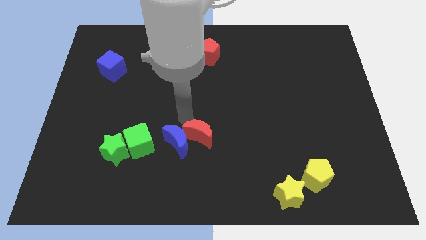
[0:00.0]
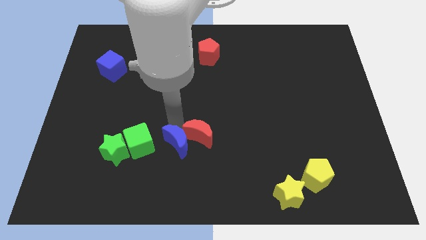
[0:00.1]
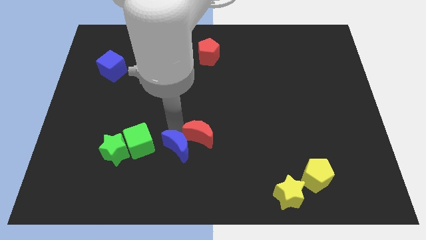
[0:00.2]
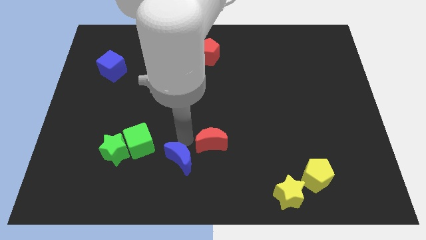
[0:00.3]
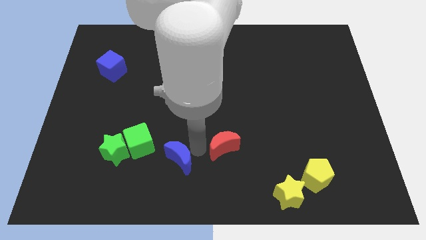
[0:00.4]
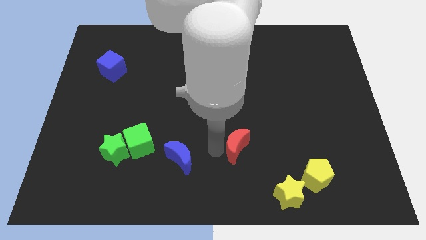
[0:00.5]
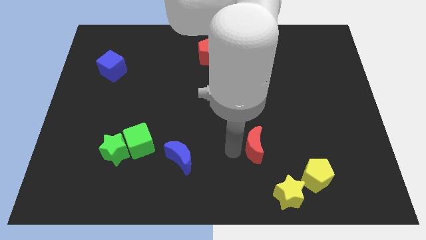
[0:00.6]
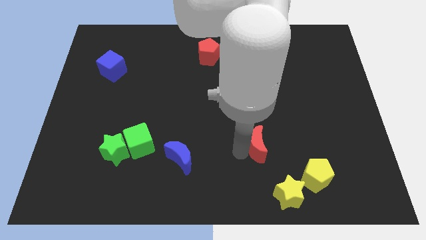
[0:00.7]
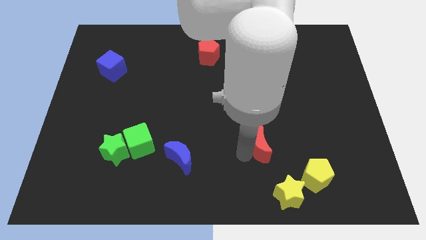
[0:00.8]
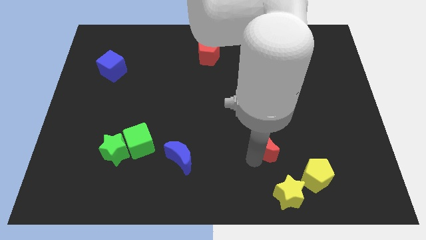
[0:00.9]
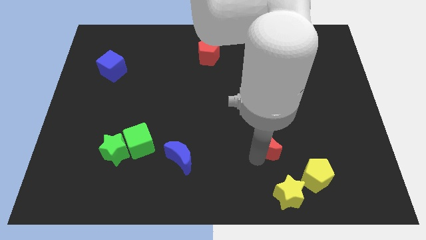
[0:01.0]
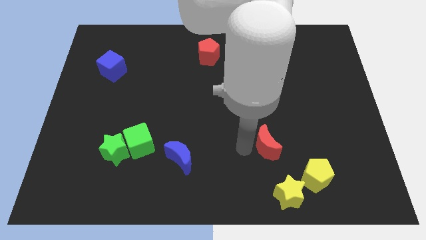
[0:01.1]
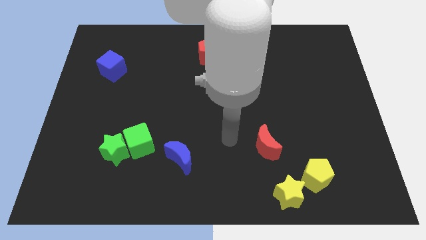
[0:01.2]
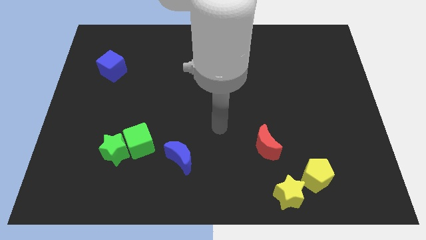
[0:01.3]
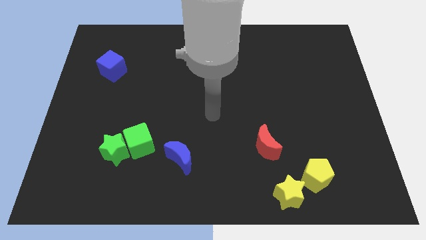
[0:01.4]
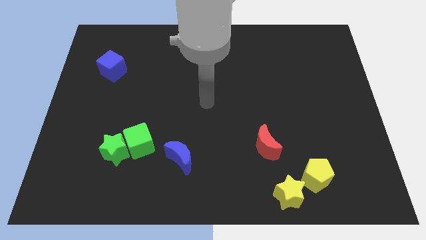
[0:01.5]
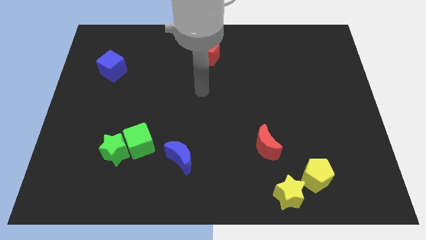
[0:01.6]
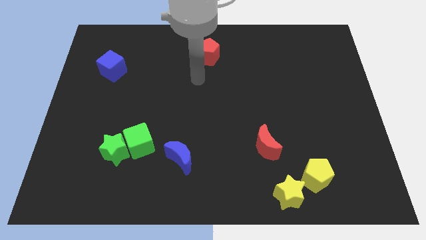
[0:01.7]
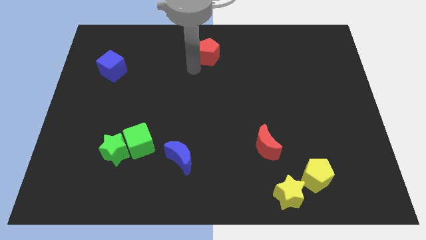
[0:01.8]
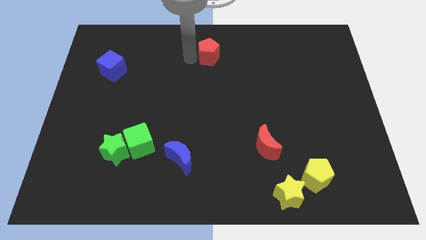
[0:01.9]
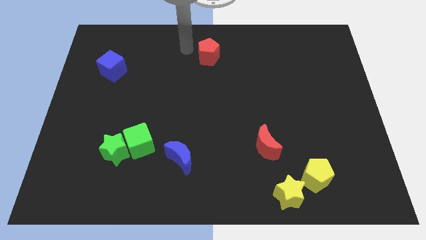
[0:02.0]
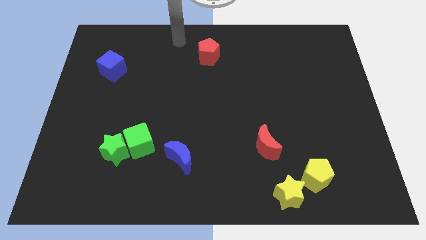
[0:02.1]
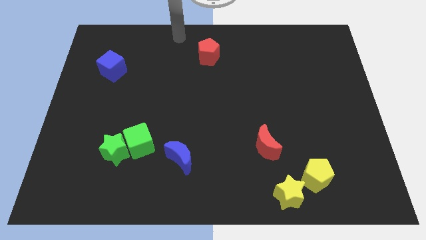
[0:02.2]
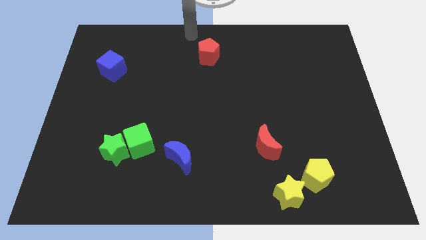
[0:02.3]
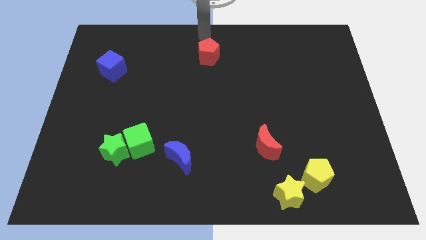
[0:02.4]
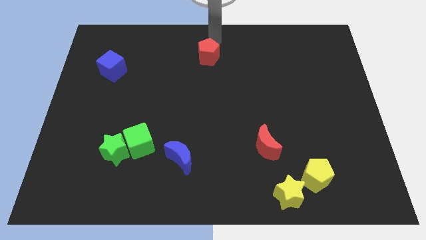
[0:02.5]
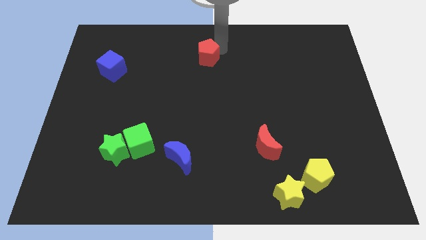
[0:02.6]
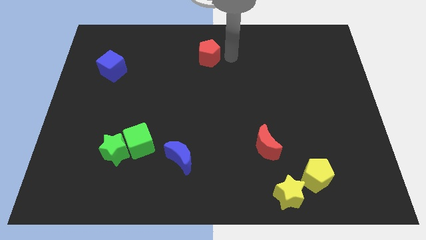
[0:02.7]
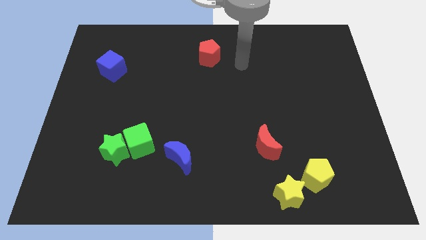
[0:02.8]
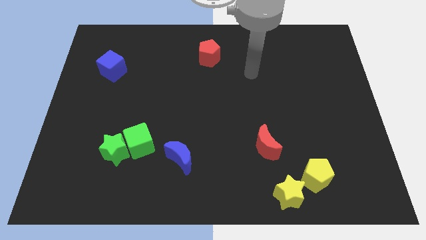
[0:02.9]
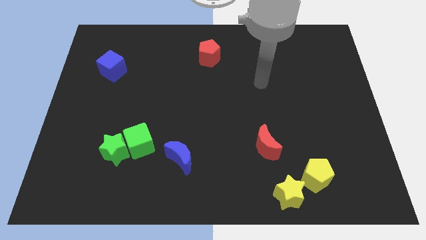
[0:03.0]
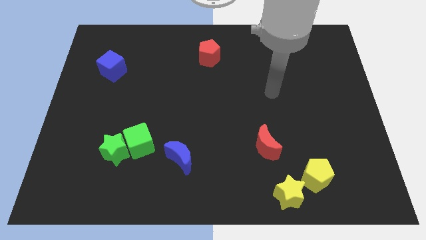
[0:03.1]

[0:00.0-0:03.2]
place the red crescent diagonal to the blue cube

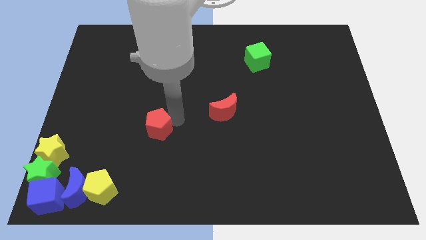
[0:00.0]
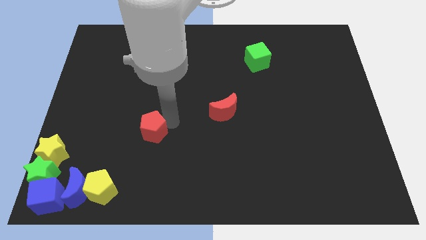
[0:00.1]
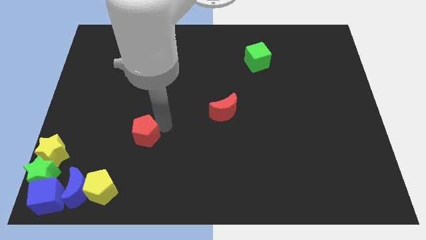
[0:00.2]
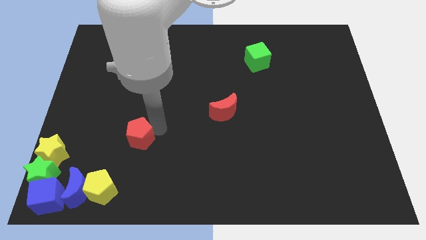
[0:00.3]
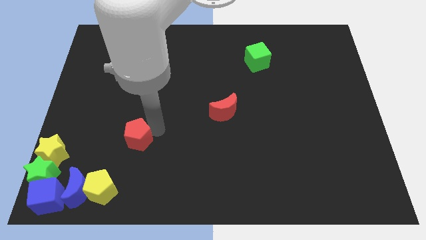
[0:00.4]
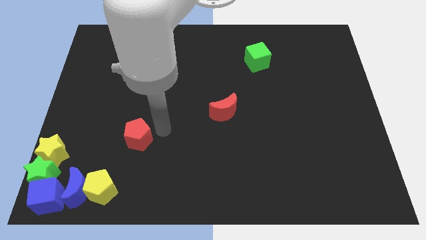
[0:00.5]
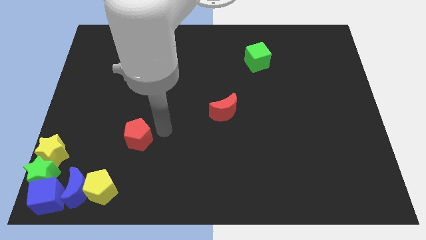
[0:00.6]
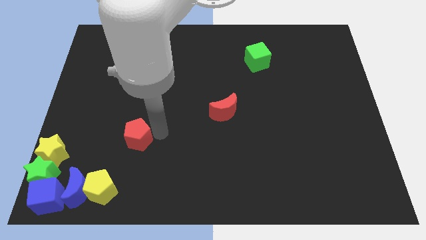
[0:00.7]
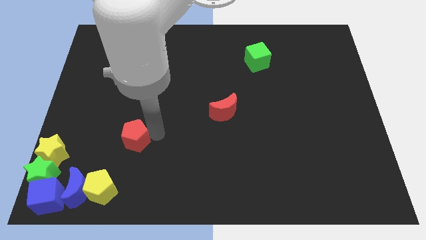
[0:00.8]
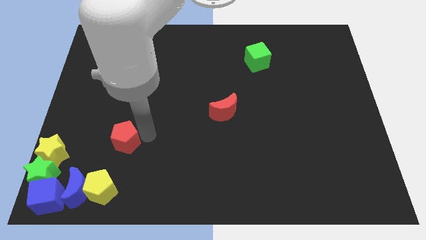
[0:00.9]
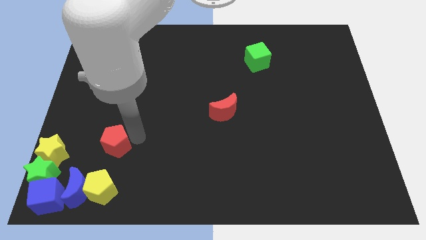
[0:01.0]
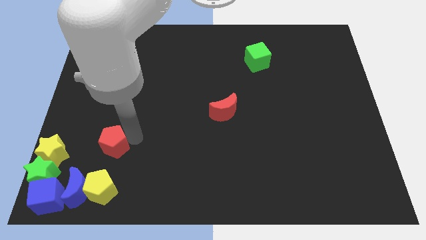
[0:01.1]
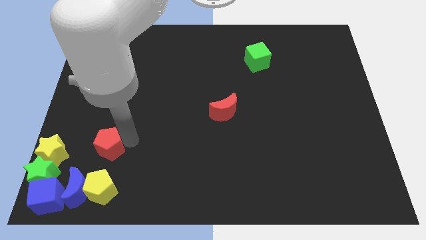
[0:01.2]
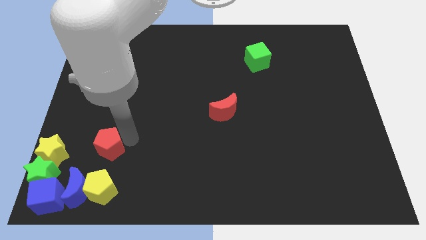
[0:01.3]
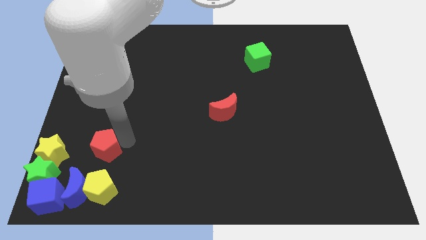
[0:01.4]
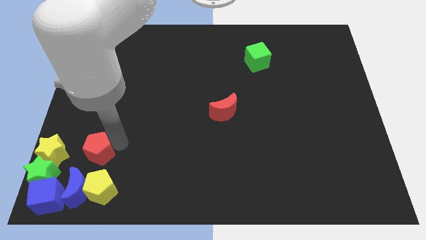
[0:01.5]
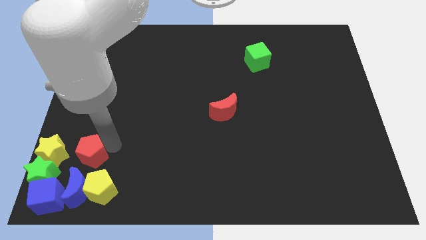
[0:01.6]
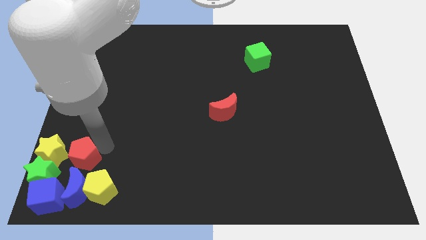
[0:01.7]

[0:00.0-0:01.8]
push red pentagon above yellow pentagon

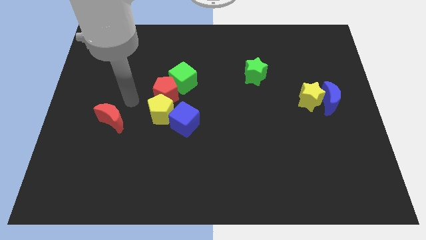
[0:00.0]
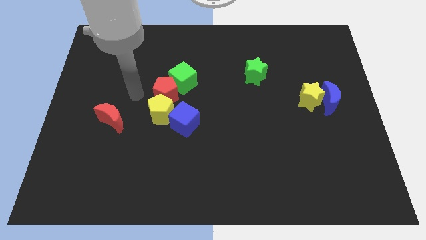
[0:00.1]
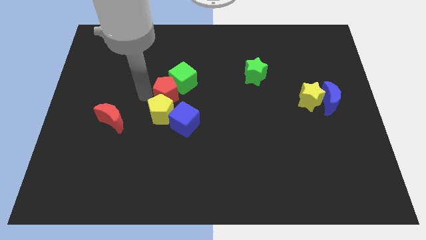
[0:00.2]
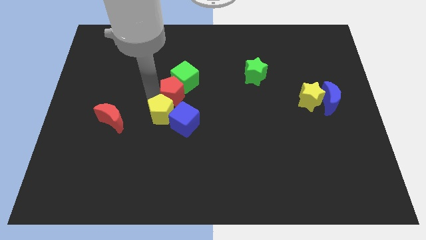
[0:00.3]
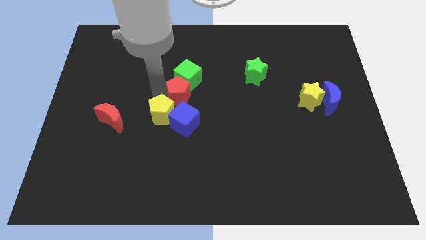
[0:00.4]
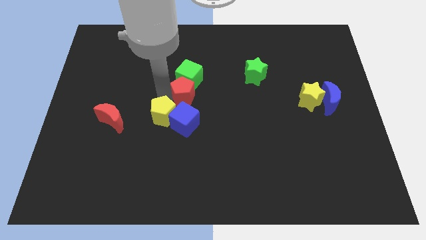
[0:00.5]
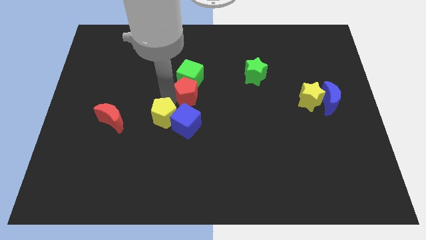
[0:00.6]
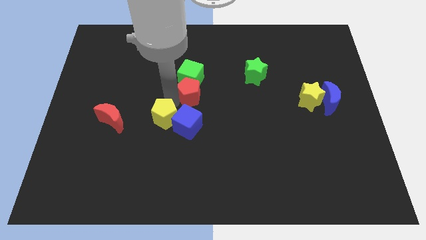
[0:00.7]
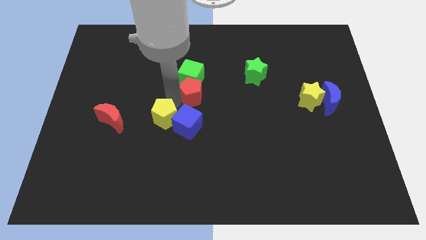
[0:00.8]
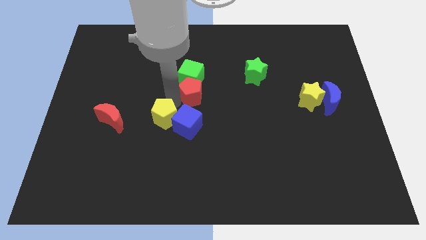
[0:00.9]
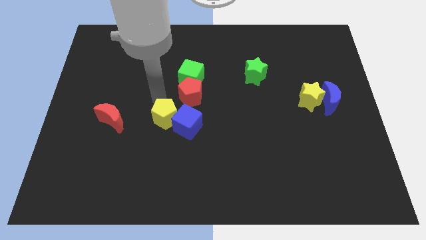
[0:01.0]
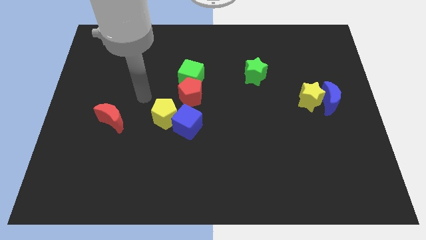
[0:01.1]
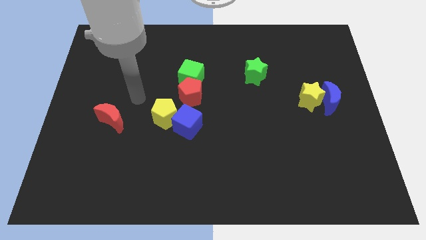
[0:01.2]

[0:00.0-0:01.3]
push the red pentagon to the top of the blue cube

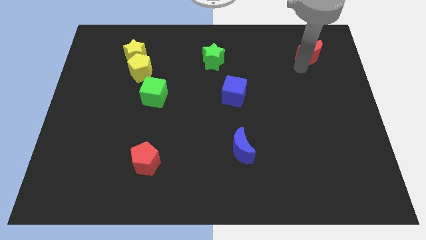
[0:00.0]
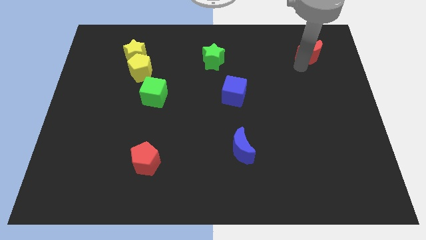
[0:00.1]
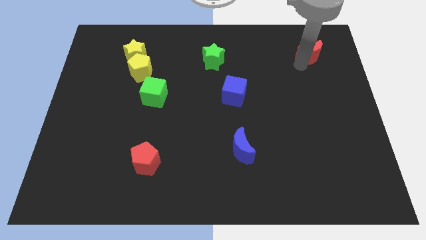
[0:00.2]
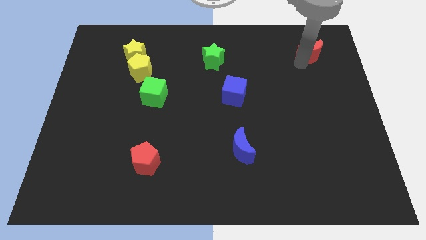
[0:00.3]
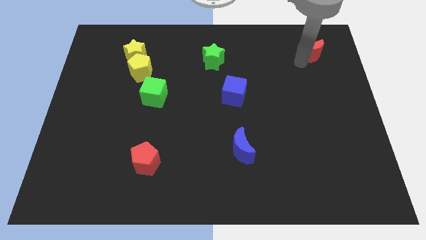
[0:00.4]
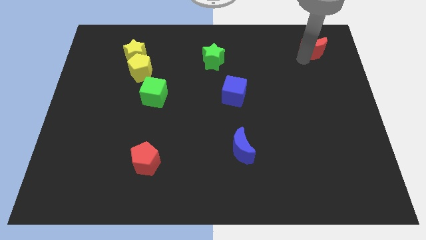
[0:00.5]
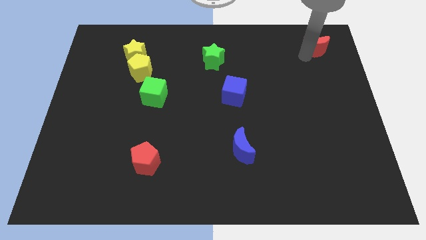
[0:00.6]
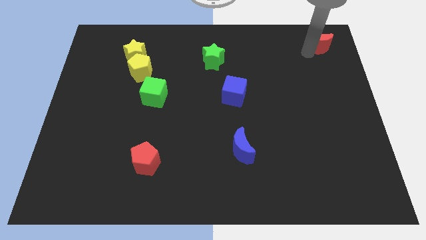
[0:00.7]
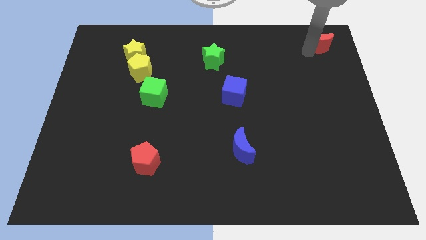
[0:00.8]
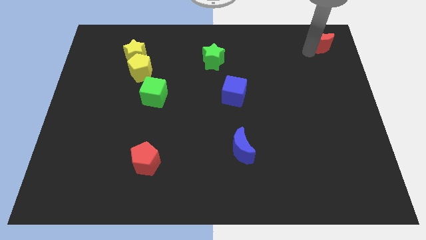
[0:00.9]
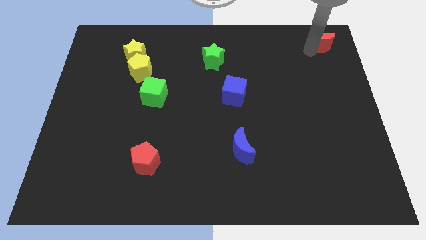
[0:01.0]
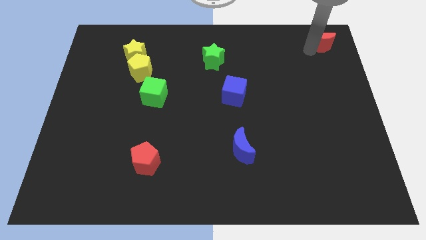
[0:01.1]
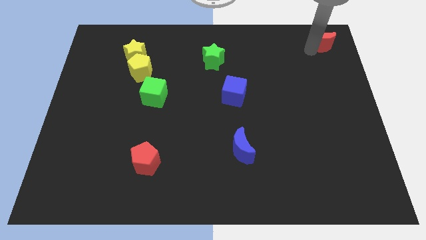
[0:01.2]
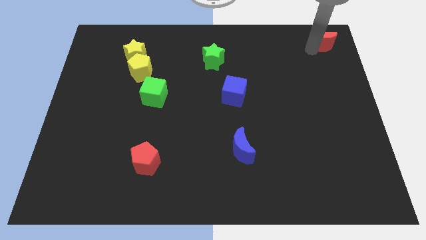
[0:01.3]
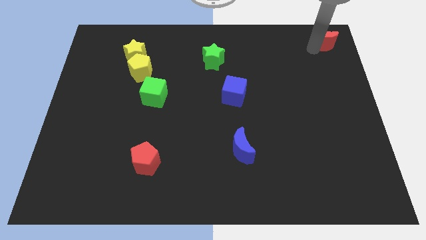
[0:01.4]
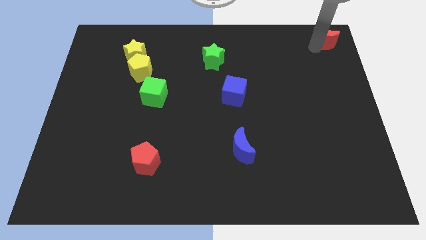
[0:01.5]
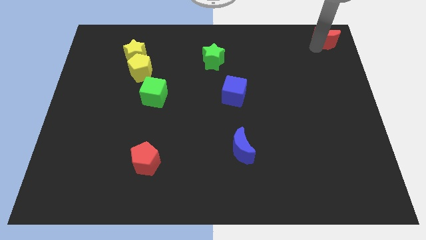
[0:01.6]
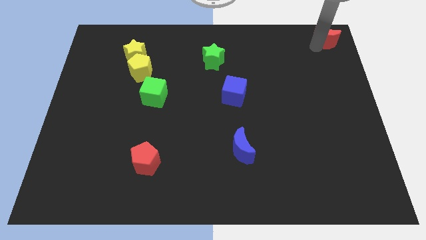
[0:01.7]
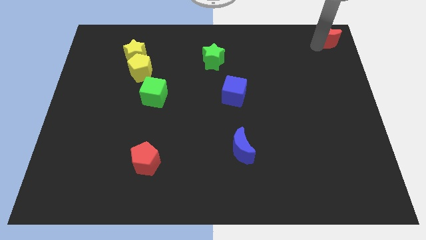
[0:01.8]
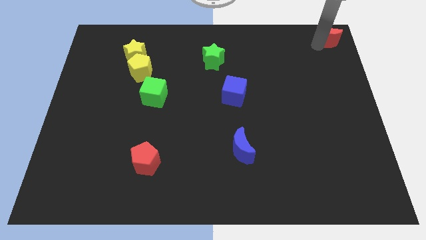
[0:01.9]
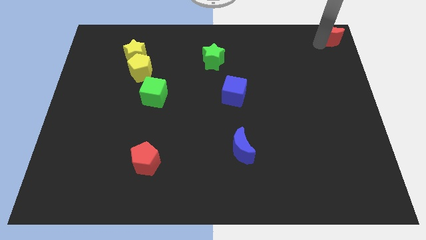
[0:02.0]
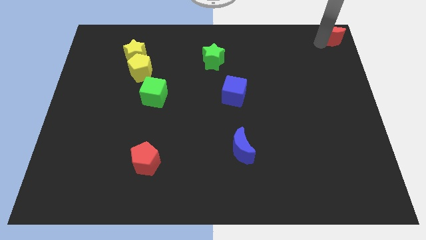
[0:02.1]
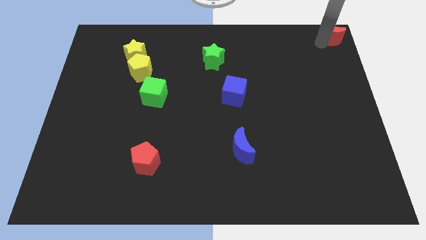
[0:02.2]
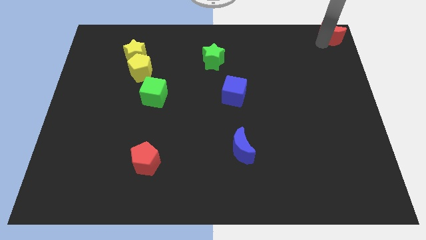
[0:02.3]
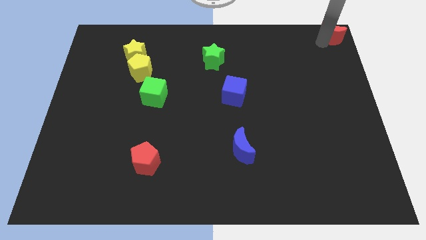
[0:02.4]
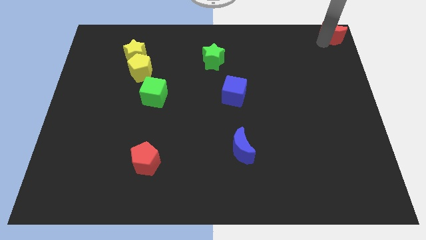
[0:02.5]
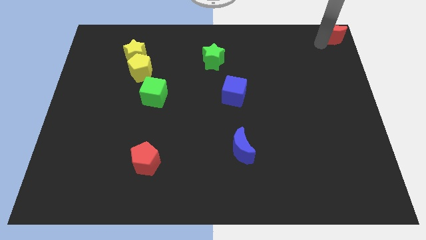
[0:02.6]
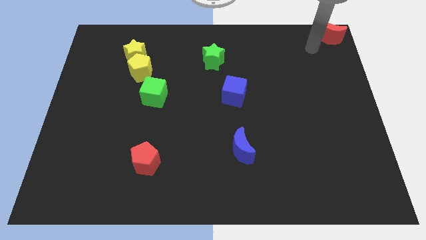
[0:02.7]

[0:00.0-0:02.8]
push the red crescente towards the top right corner of the board
